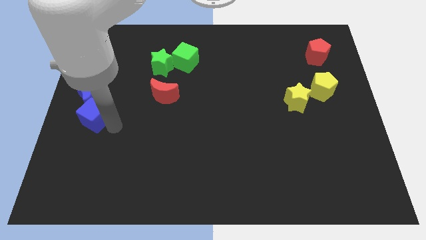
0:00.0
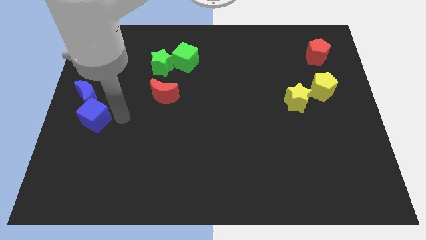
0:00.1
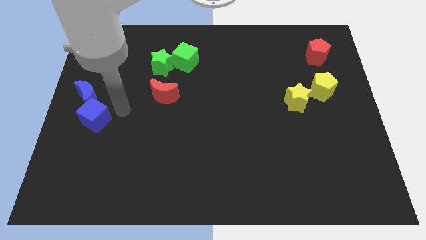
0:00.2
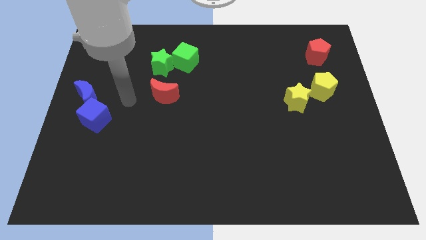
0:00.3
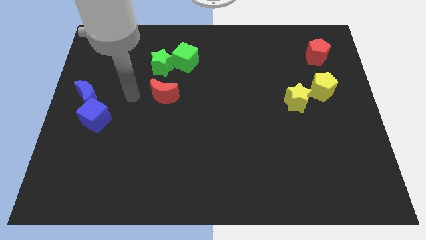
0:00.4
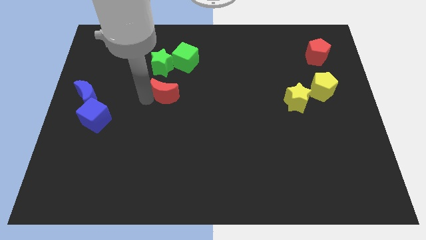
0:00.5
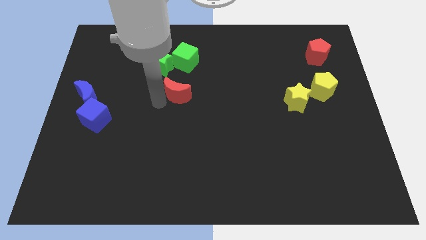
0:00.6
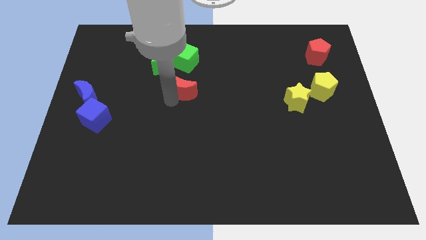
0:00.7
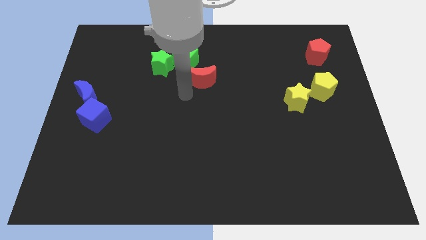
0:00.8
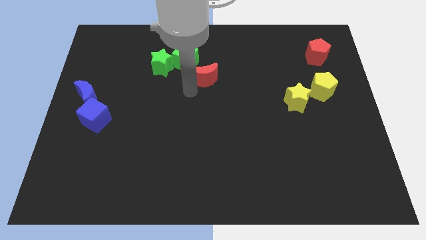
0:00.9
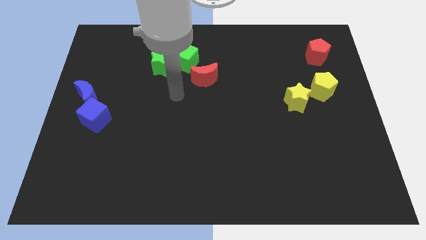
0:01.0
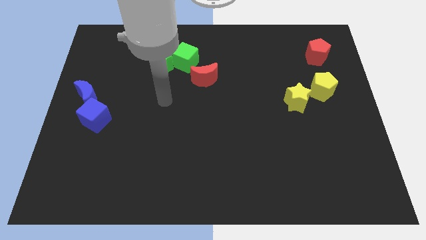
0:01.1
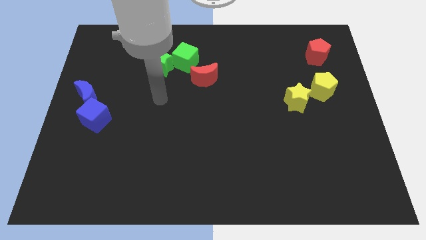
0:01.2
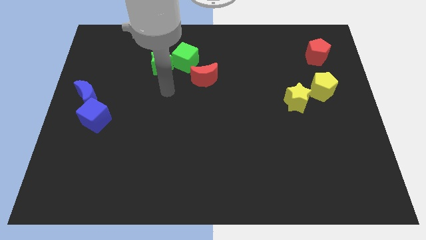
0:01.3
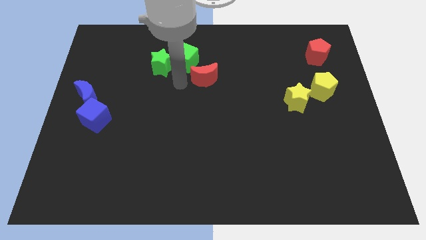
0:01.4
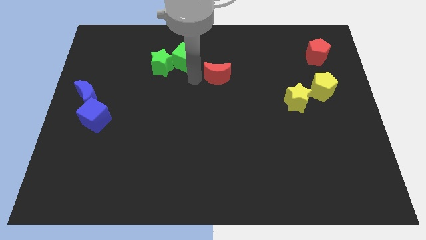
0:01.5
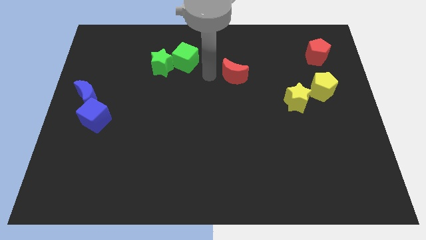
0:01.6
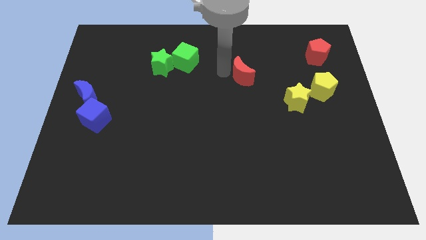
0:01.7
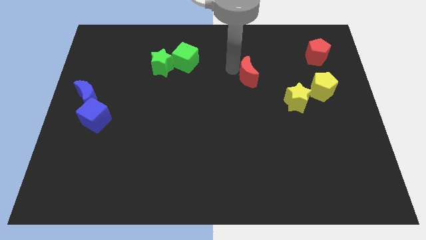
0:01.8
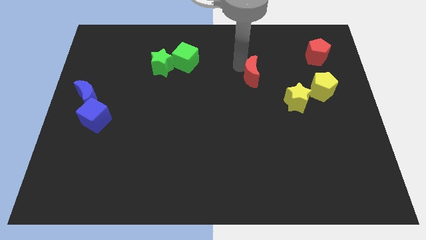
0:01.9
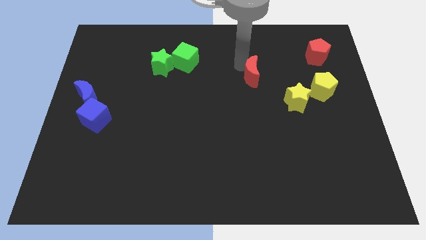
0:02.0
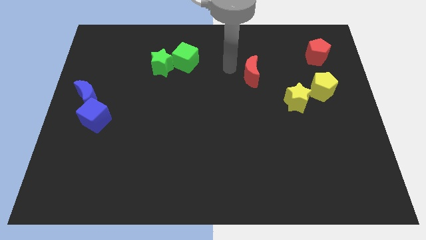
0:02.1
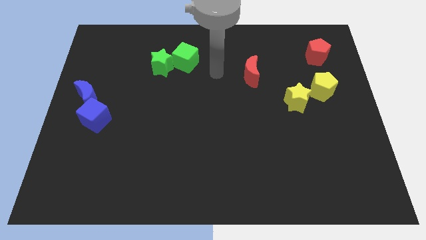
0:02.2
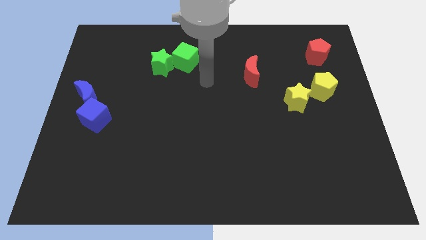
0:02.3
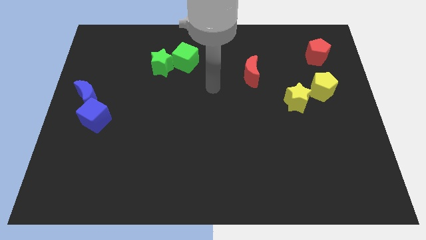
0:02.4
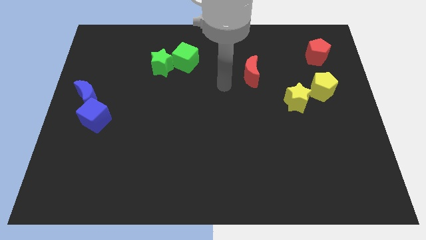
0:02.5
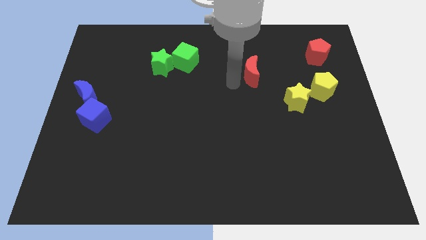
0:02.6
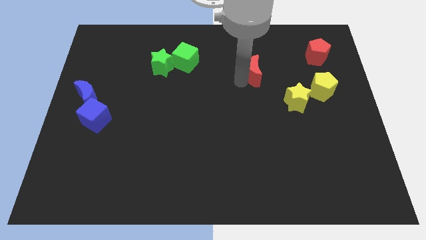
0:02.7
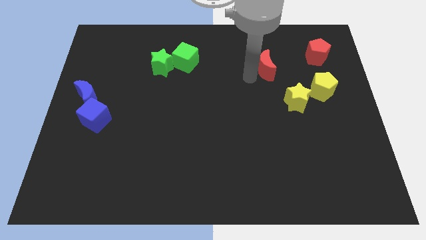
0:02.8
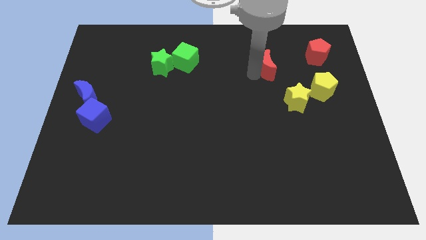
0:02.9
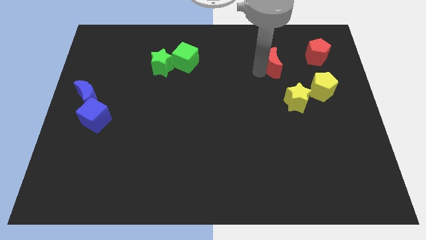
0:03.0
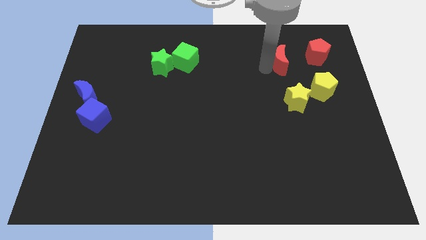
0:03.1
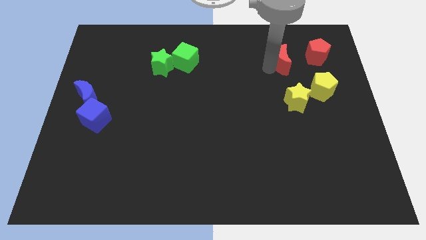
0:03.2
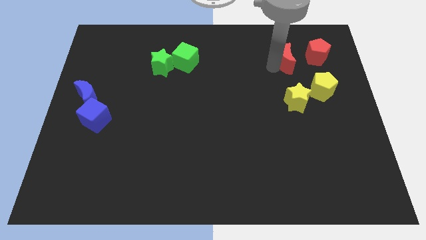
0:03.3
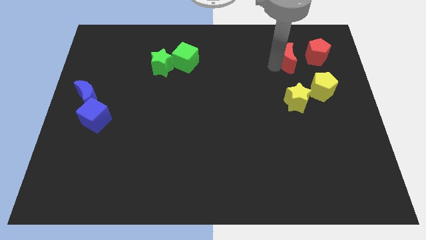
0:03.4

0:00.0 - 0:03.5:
place red moon to the left red pentagon

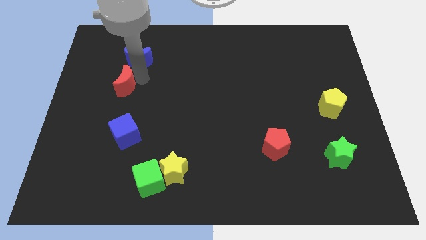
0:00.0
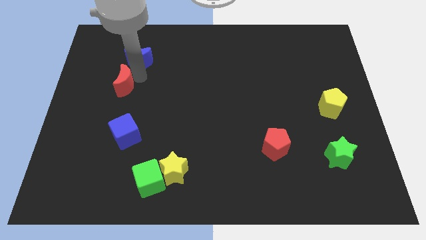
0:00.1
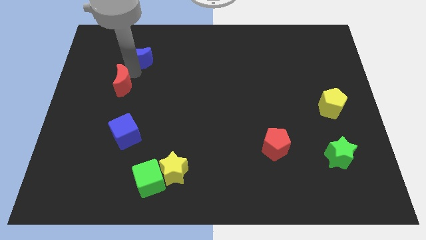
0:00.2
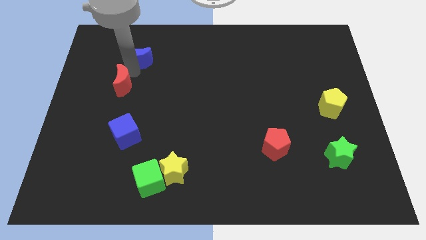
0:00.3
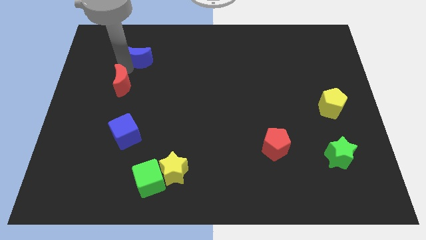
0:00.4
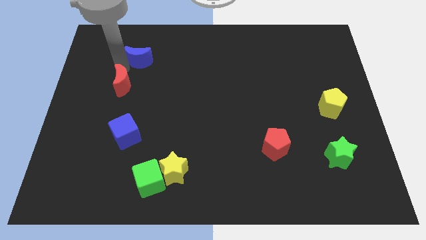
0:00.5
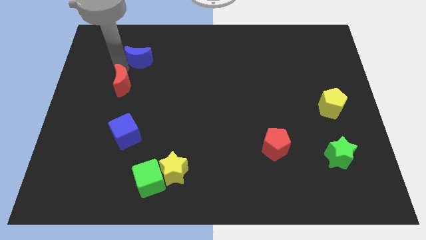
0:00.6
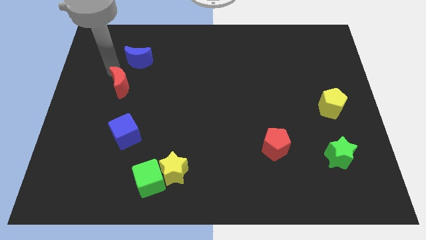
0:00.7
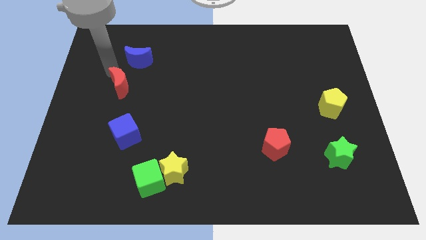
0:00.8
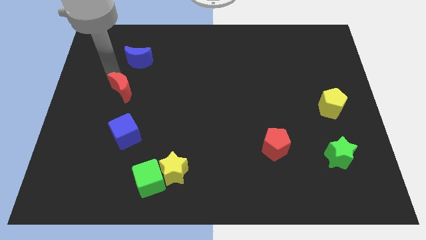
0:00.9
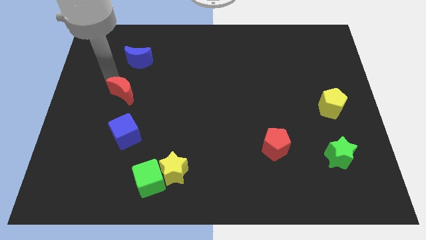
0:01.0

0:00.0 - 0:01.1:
move red crescent towards blue cube

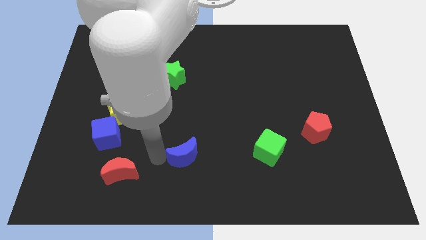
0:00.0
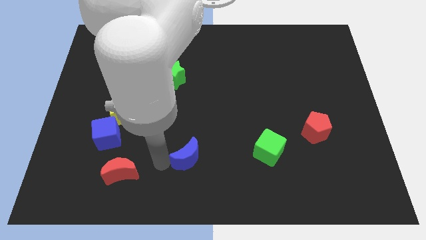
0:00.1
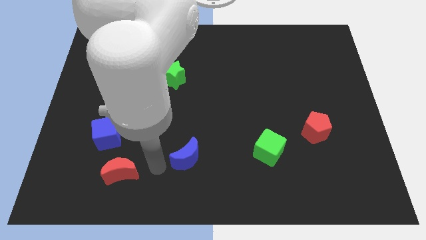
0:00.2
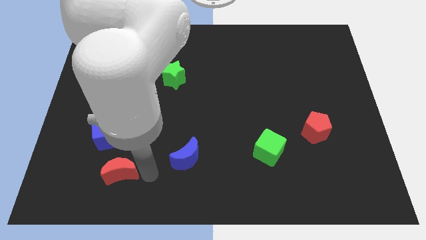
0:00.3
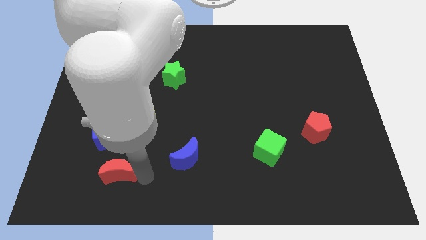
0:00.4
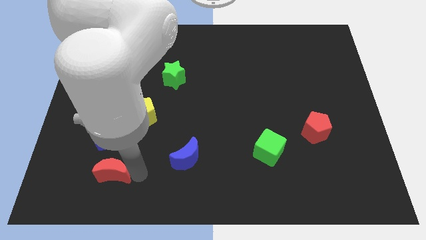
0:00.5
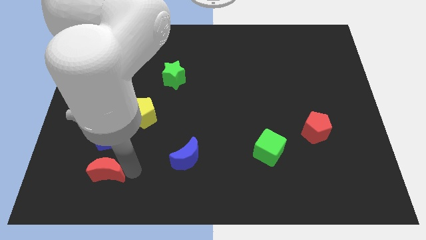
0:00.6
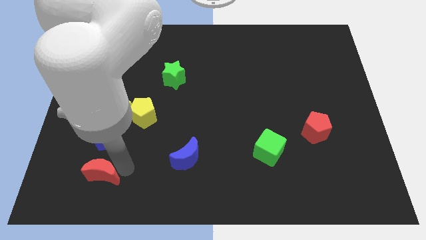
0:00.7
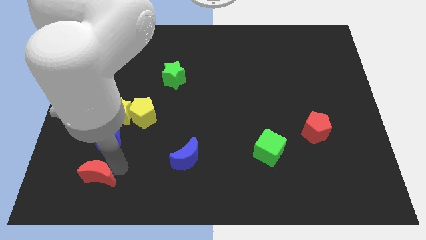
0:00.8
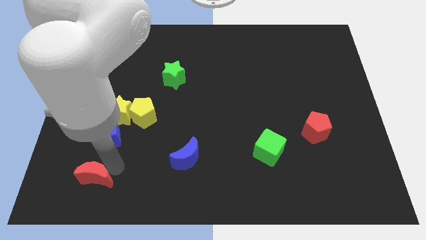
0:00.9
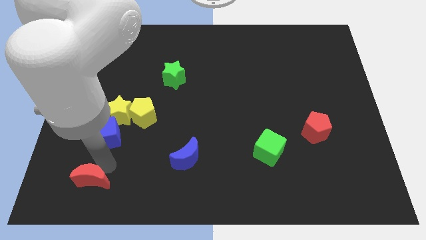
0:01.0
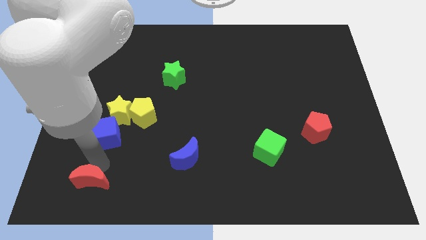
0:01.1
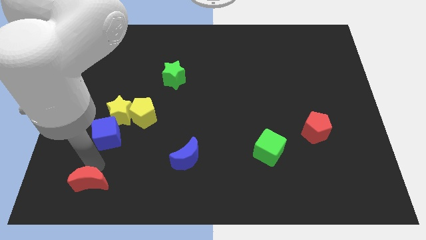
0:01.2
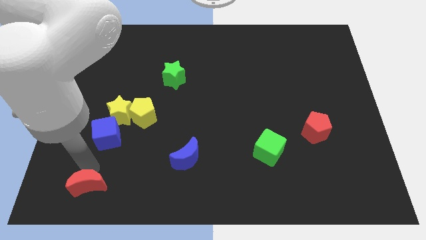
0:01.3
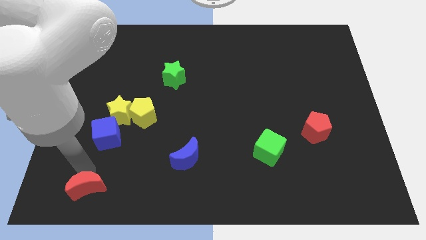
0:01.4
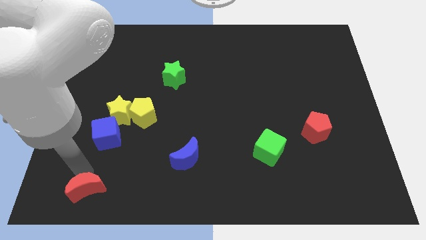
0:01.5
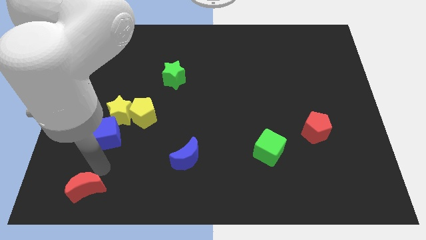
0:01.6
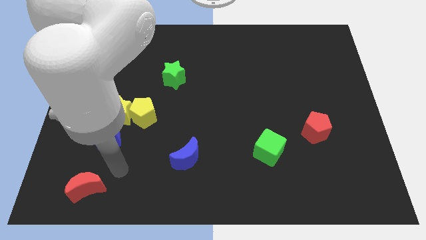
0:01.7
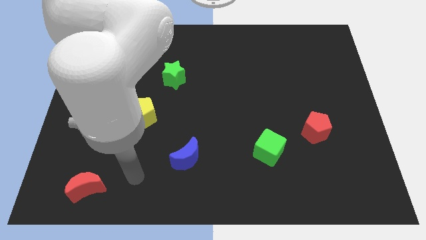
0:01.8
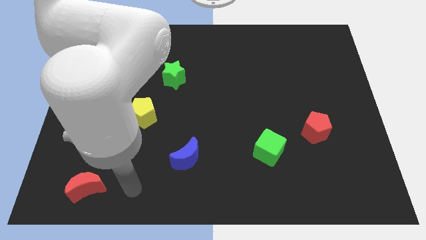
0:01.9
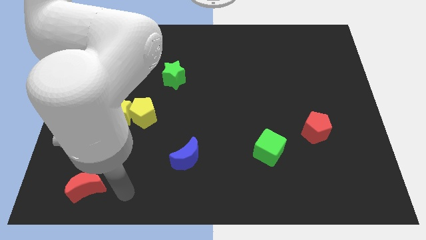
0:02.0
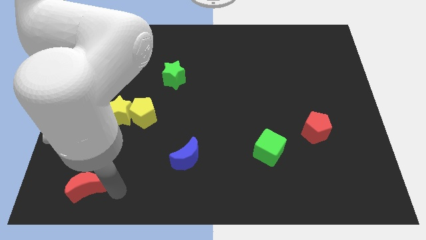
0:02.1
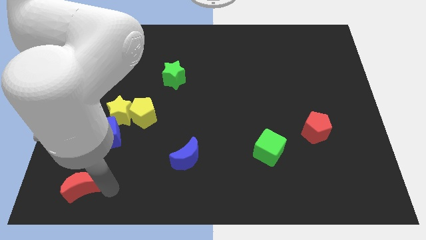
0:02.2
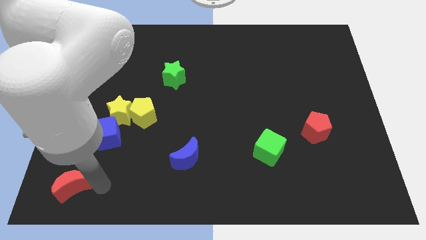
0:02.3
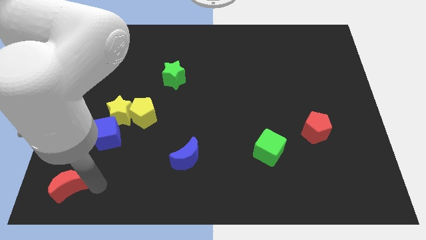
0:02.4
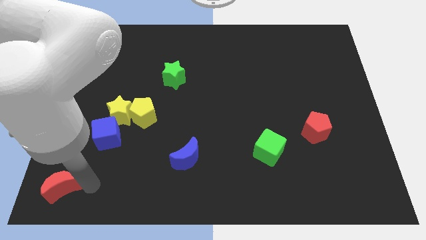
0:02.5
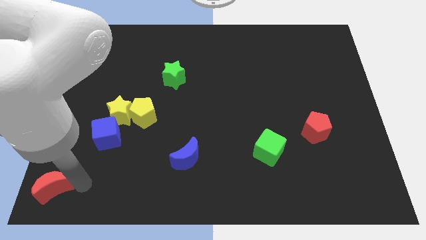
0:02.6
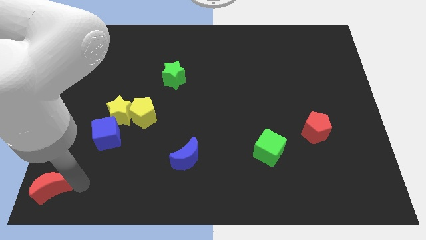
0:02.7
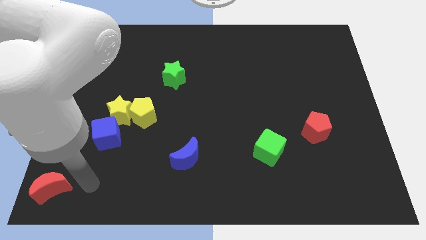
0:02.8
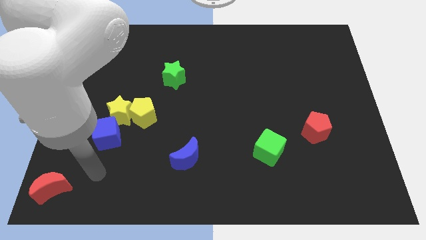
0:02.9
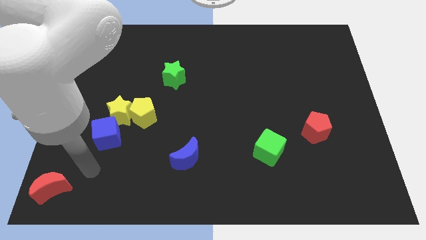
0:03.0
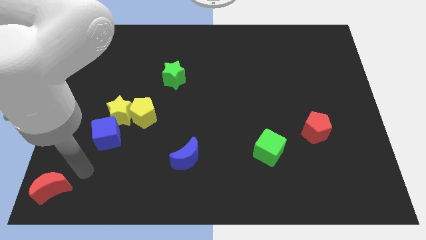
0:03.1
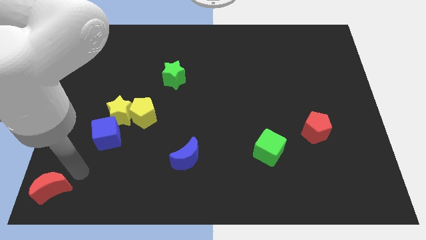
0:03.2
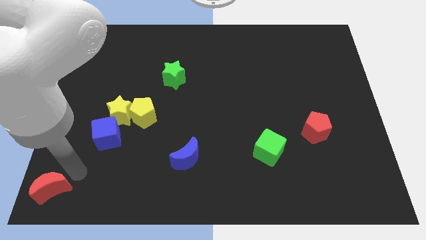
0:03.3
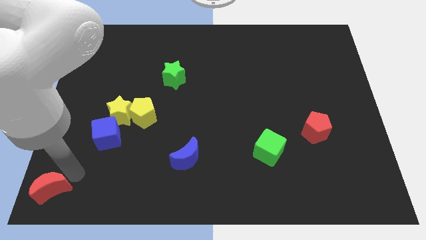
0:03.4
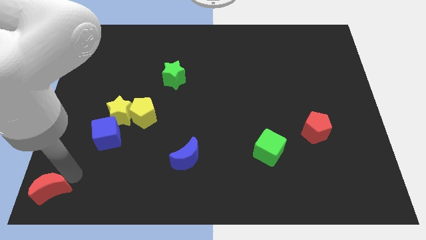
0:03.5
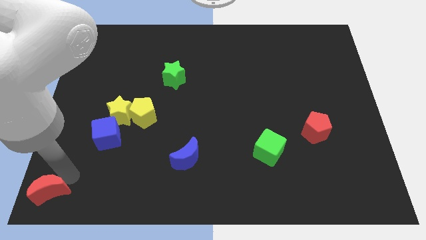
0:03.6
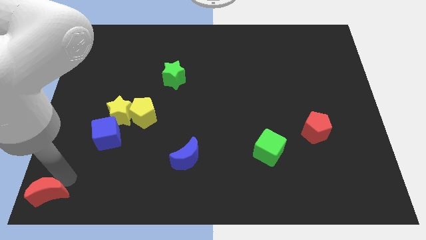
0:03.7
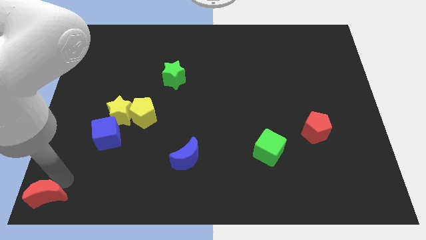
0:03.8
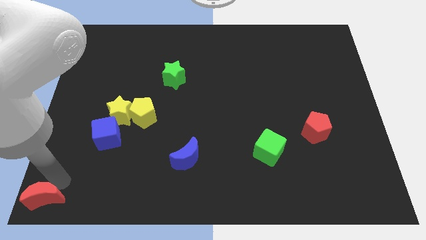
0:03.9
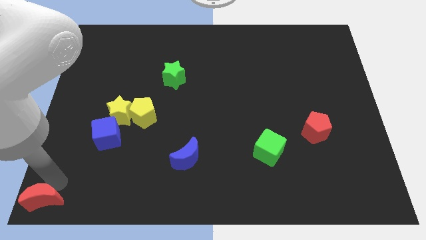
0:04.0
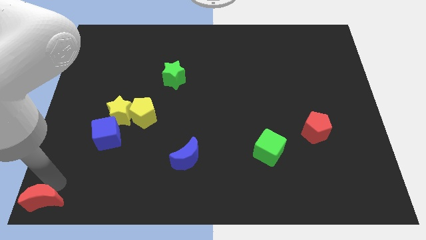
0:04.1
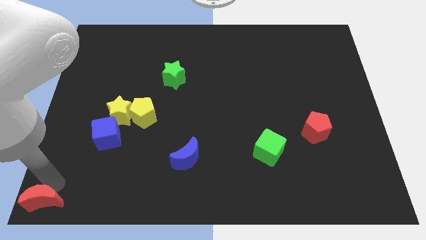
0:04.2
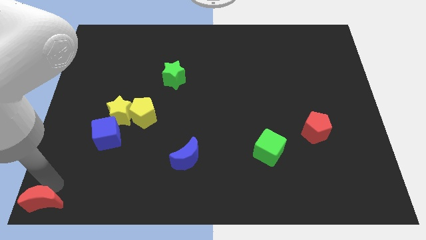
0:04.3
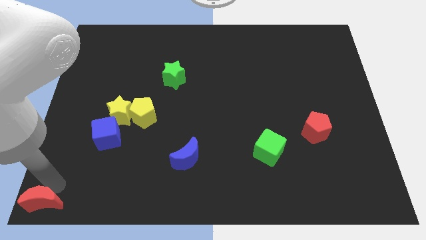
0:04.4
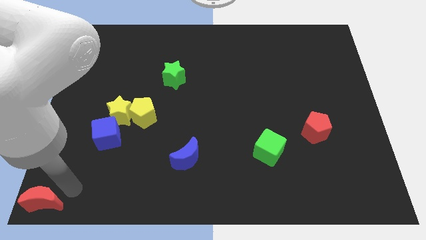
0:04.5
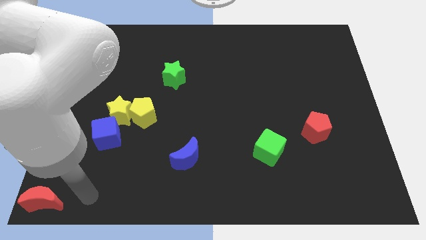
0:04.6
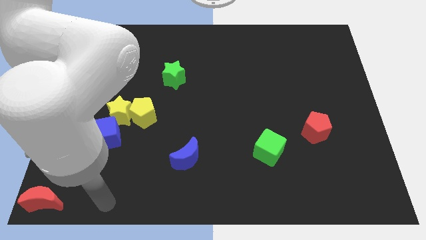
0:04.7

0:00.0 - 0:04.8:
push the red moon to the left bottom
